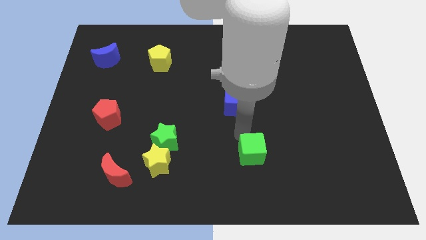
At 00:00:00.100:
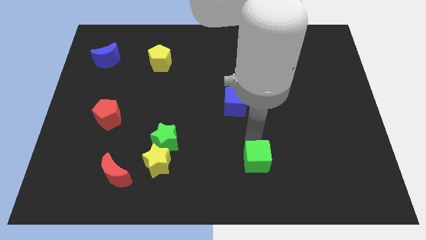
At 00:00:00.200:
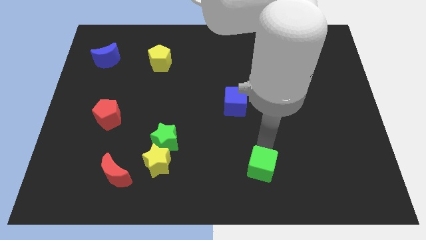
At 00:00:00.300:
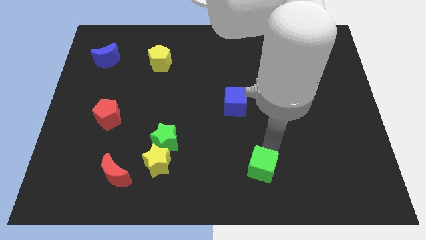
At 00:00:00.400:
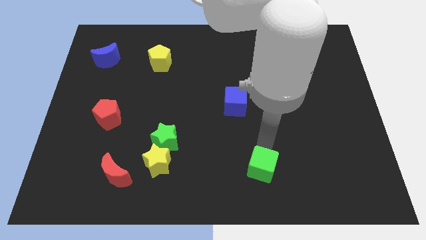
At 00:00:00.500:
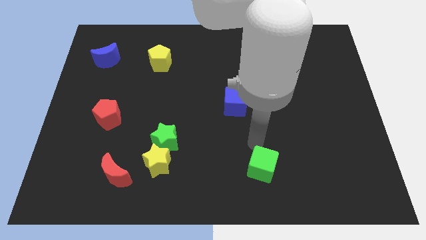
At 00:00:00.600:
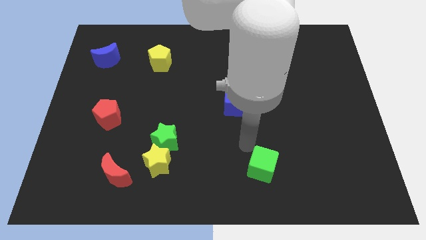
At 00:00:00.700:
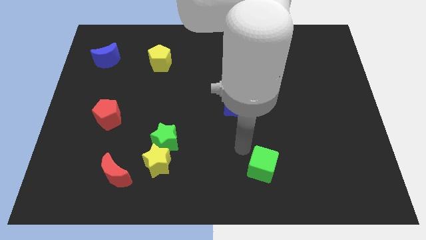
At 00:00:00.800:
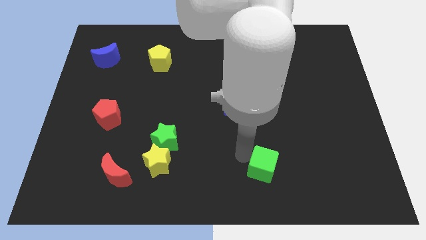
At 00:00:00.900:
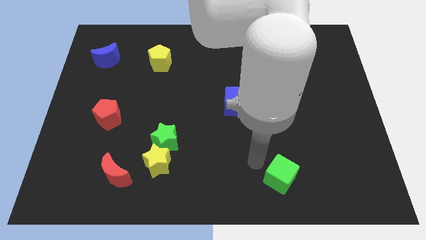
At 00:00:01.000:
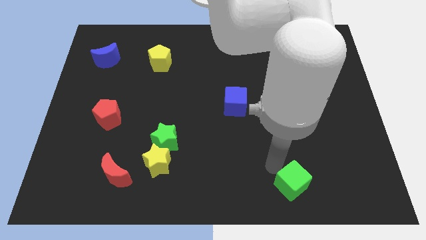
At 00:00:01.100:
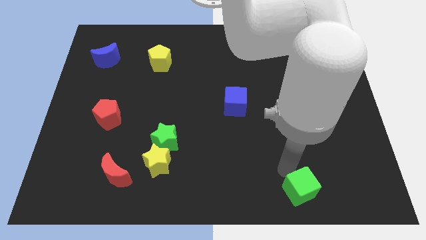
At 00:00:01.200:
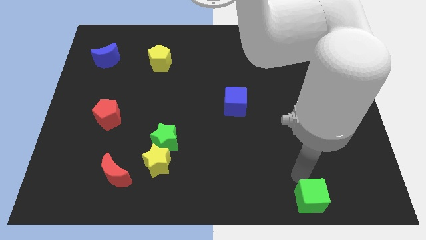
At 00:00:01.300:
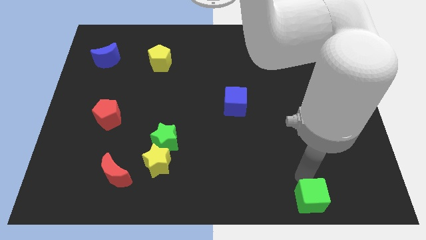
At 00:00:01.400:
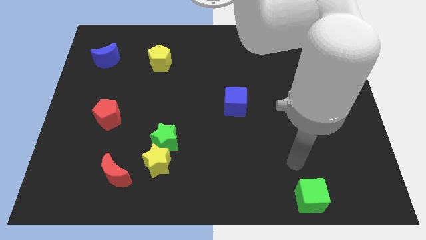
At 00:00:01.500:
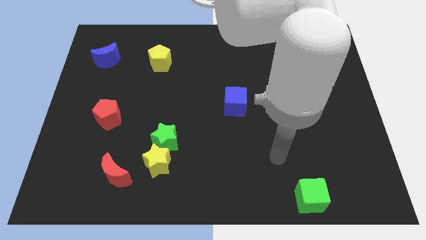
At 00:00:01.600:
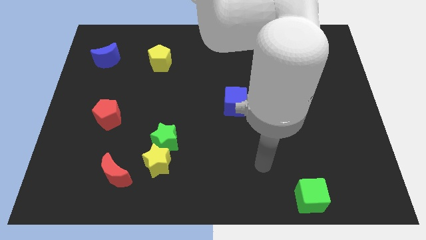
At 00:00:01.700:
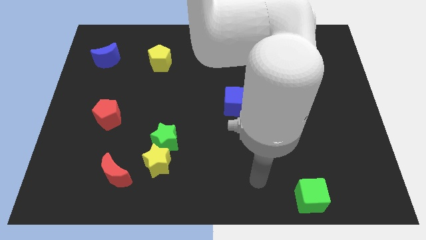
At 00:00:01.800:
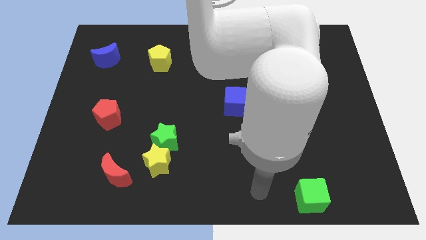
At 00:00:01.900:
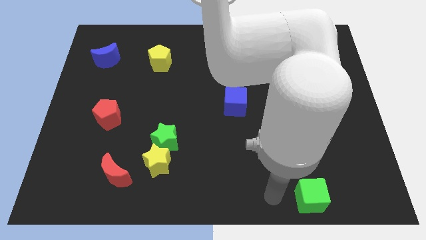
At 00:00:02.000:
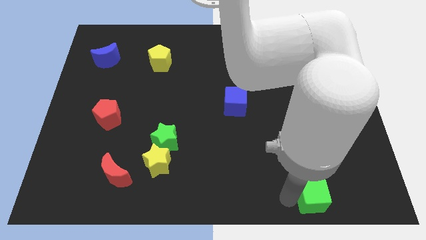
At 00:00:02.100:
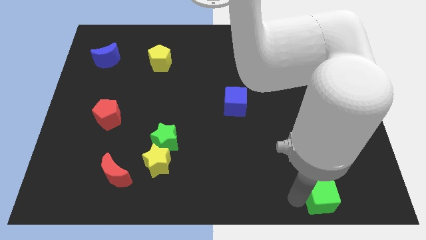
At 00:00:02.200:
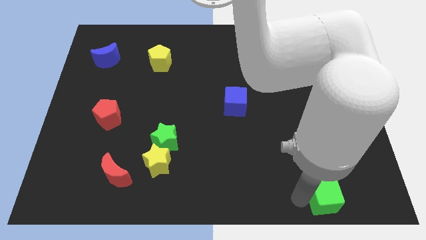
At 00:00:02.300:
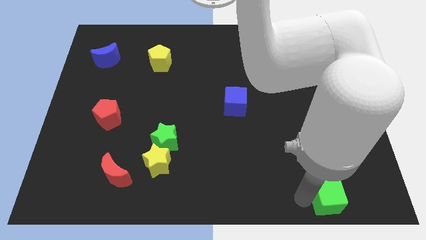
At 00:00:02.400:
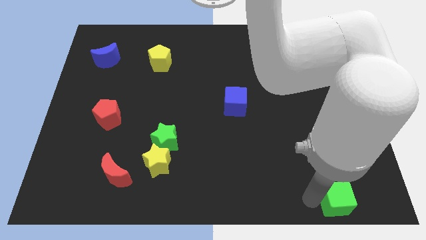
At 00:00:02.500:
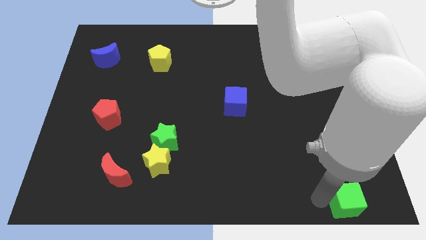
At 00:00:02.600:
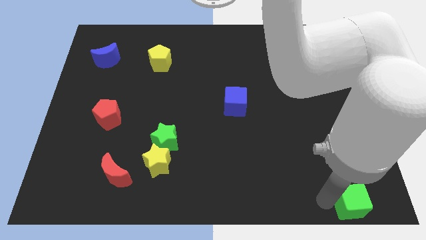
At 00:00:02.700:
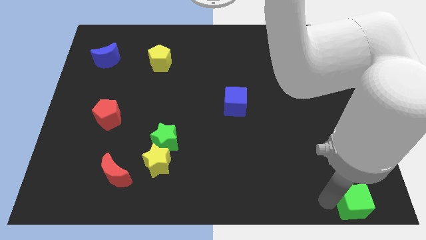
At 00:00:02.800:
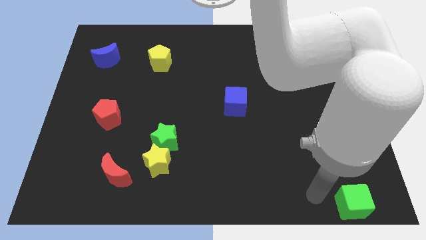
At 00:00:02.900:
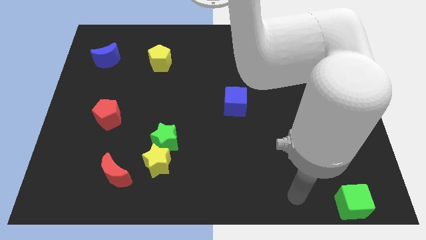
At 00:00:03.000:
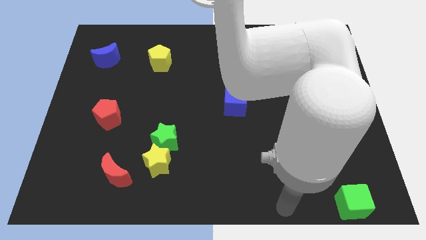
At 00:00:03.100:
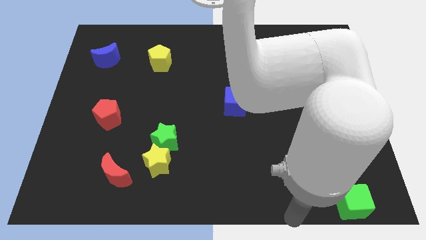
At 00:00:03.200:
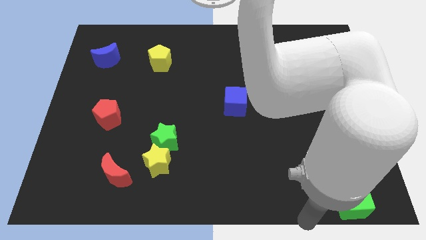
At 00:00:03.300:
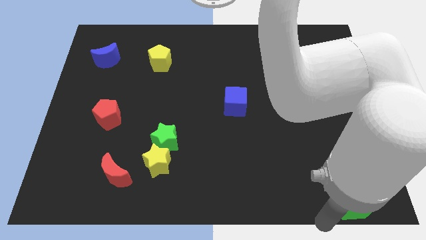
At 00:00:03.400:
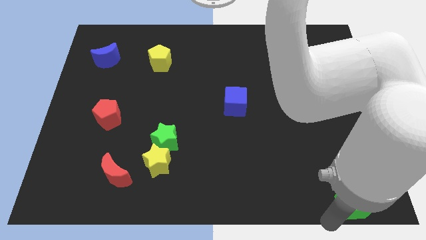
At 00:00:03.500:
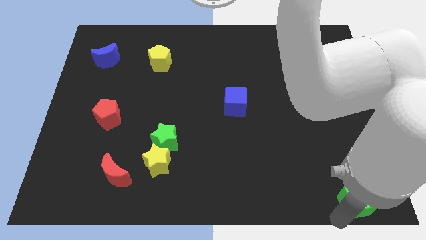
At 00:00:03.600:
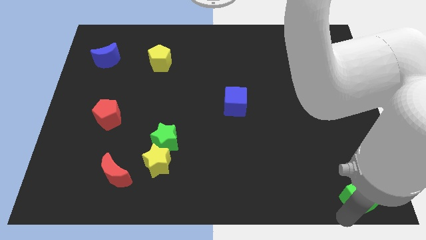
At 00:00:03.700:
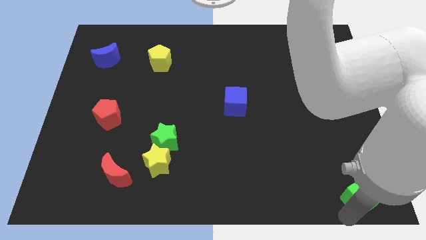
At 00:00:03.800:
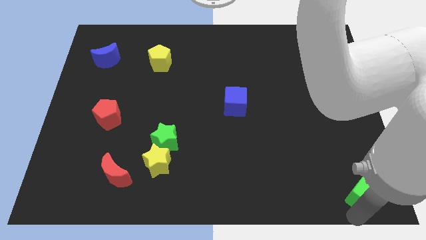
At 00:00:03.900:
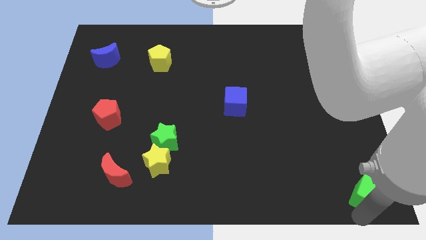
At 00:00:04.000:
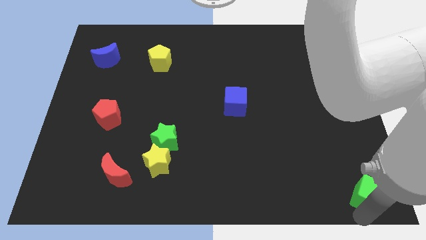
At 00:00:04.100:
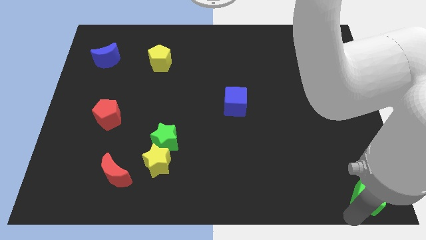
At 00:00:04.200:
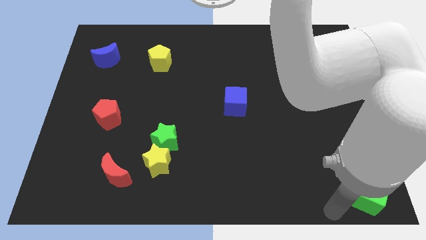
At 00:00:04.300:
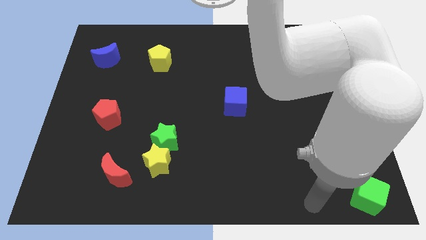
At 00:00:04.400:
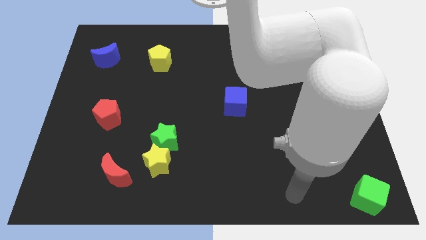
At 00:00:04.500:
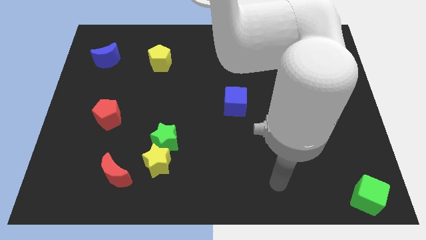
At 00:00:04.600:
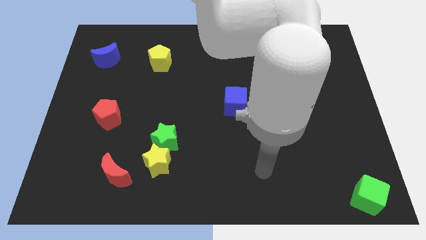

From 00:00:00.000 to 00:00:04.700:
push the green cube to the bottom right corner of the board

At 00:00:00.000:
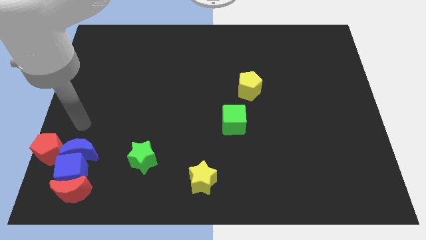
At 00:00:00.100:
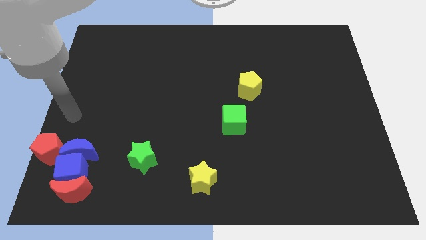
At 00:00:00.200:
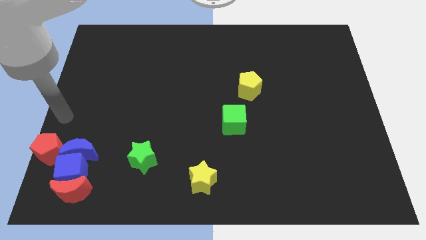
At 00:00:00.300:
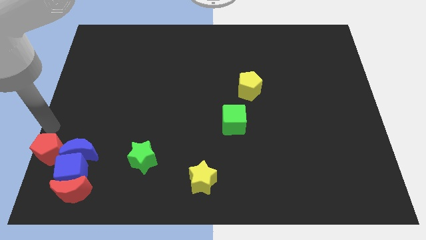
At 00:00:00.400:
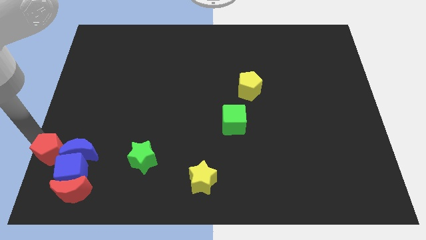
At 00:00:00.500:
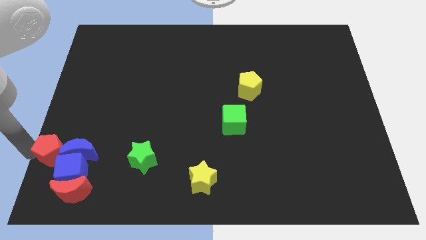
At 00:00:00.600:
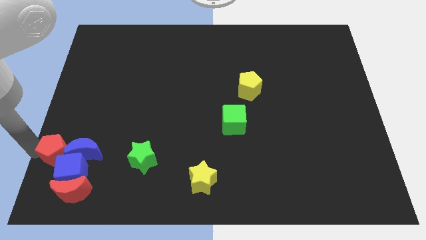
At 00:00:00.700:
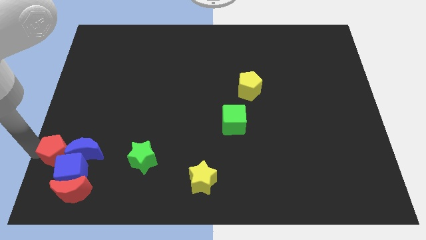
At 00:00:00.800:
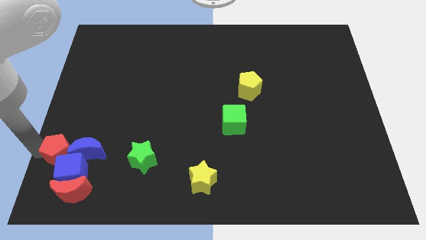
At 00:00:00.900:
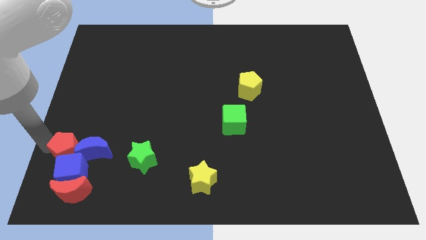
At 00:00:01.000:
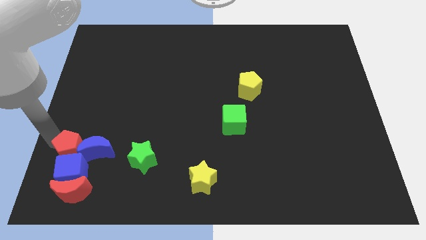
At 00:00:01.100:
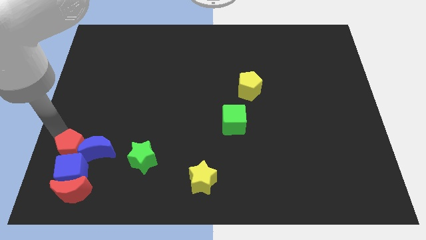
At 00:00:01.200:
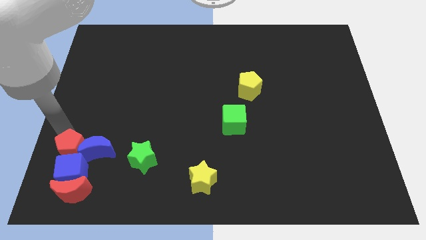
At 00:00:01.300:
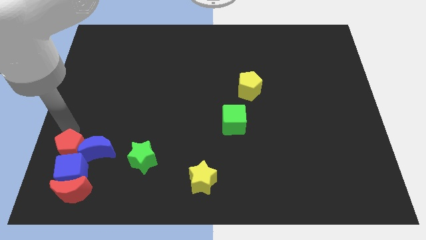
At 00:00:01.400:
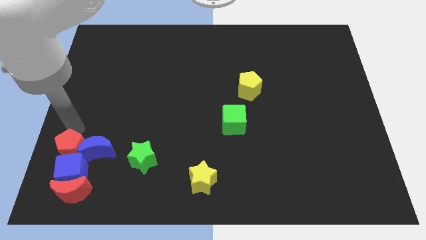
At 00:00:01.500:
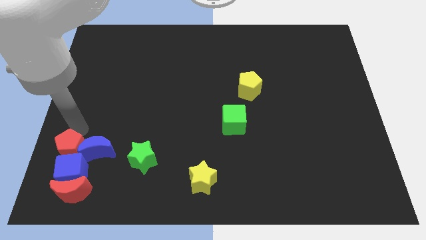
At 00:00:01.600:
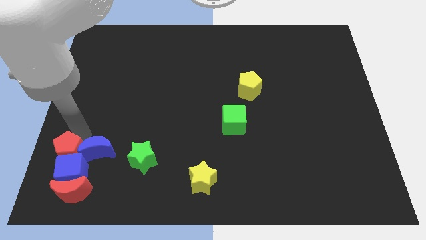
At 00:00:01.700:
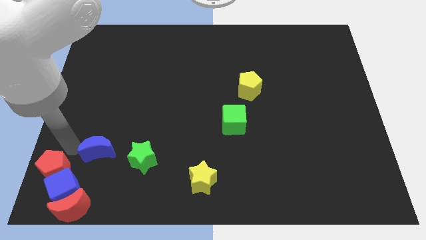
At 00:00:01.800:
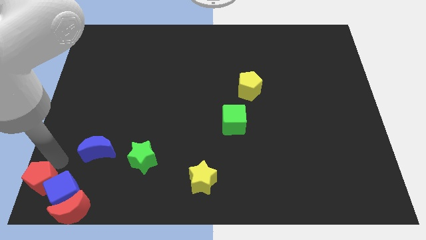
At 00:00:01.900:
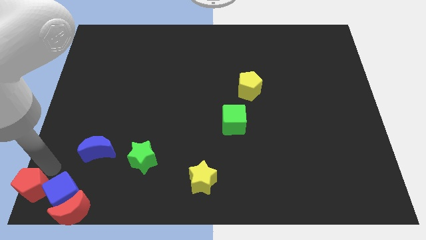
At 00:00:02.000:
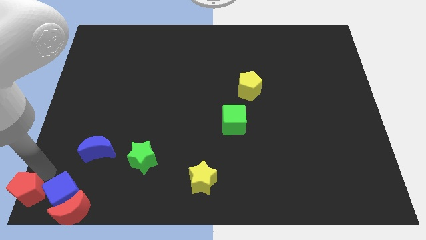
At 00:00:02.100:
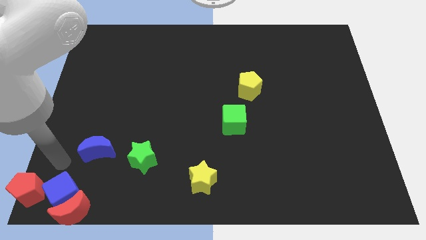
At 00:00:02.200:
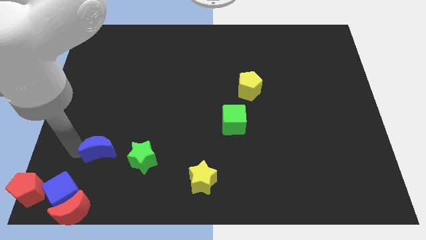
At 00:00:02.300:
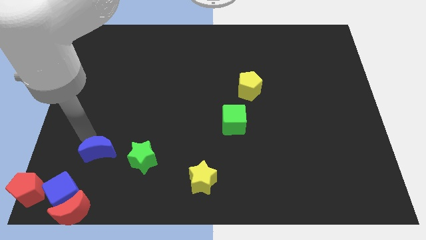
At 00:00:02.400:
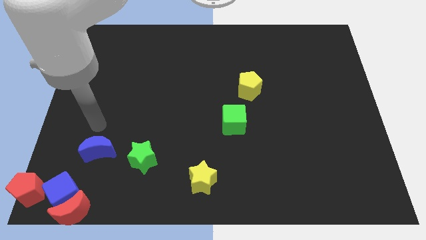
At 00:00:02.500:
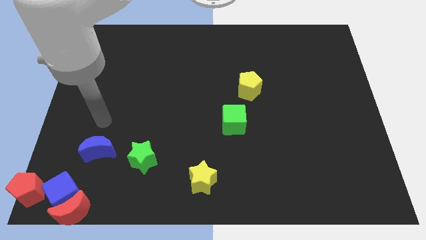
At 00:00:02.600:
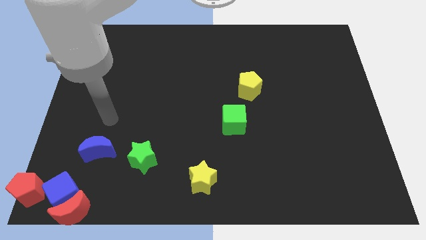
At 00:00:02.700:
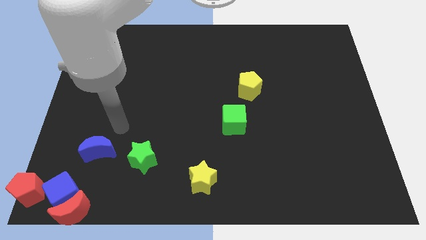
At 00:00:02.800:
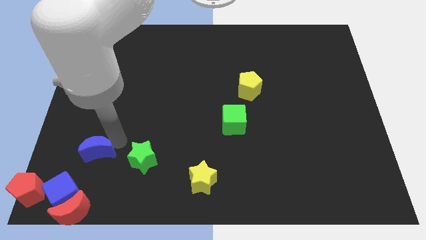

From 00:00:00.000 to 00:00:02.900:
move the red blocks and blue cube to the bottom left

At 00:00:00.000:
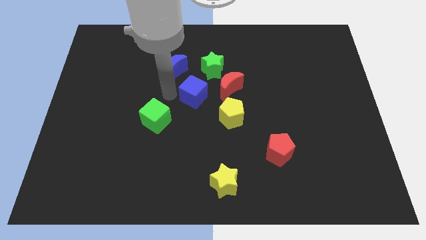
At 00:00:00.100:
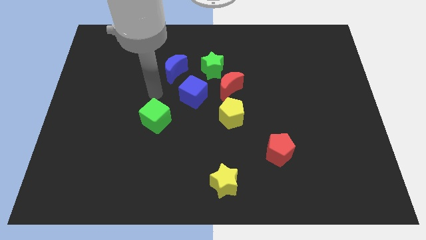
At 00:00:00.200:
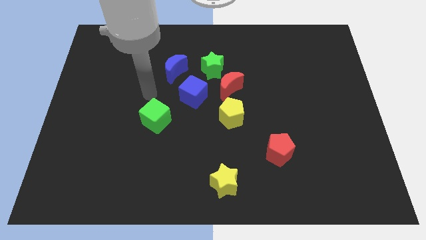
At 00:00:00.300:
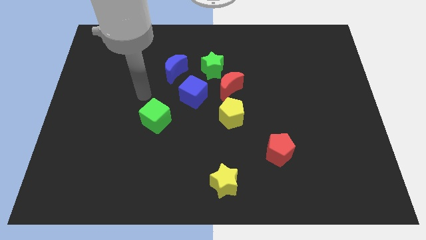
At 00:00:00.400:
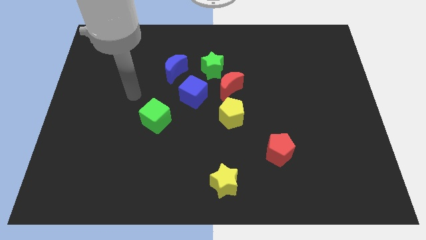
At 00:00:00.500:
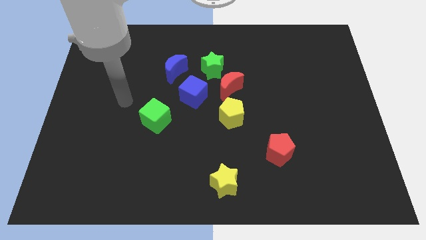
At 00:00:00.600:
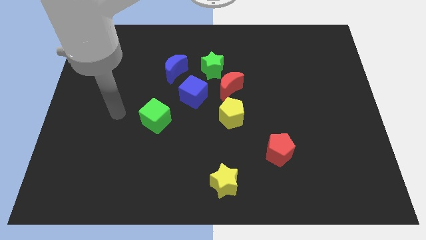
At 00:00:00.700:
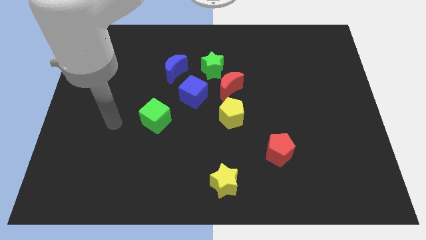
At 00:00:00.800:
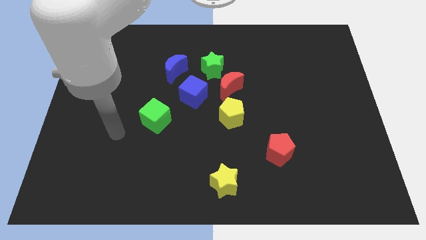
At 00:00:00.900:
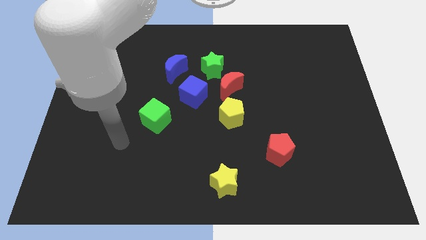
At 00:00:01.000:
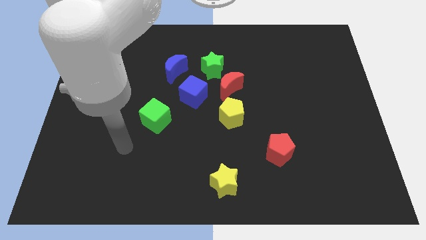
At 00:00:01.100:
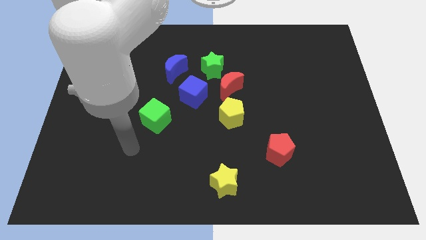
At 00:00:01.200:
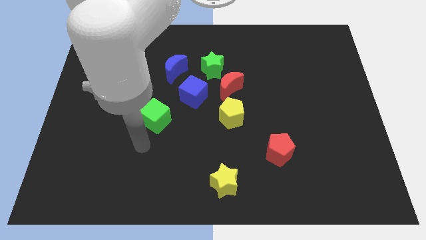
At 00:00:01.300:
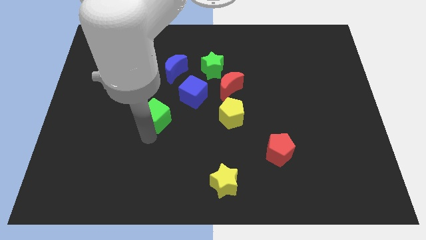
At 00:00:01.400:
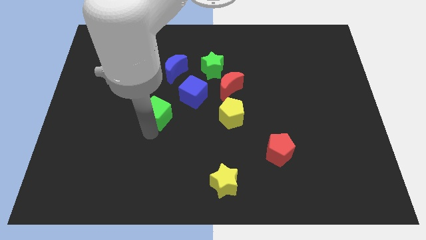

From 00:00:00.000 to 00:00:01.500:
point your arm at the bottom of the green cube
